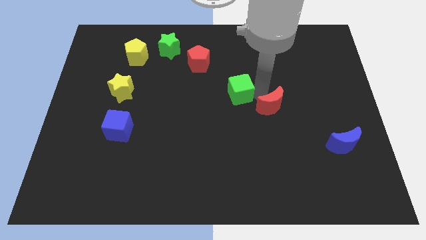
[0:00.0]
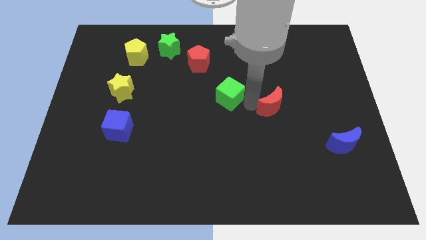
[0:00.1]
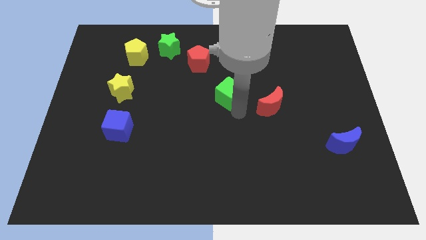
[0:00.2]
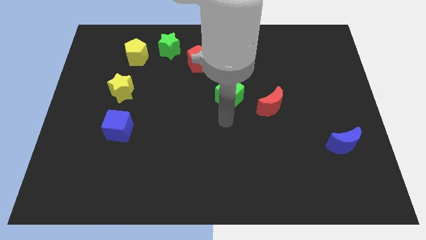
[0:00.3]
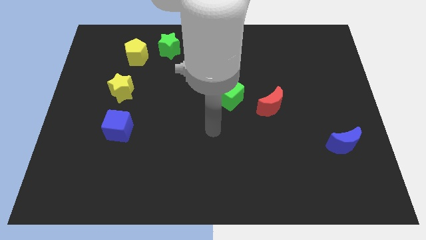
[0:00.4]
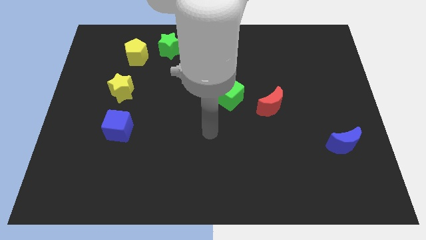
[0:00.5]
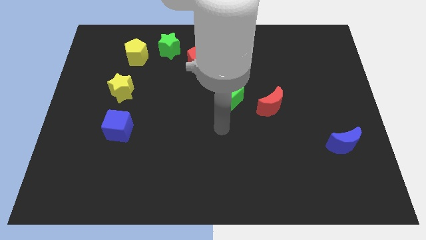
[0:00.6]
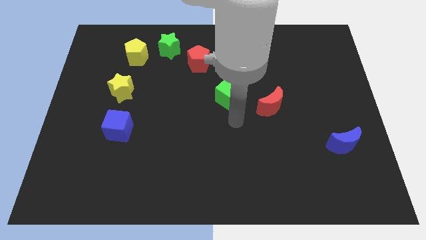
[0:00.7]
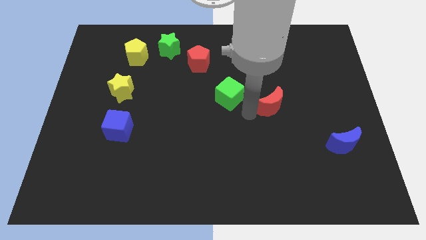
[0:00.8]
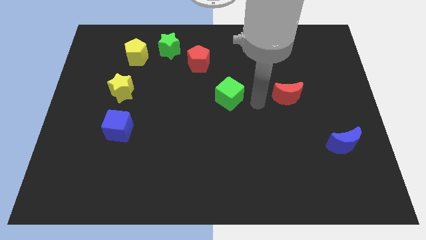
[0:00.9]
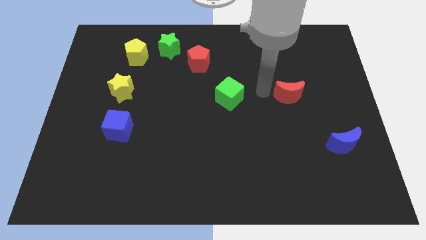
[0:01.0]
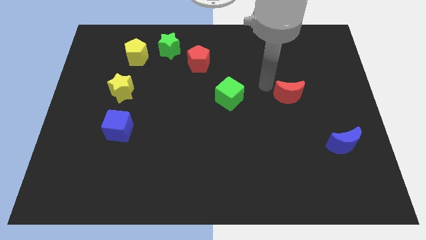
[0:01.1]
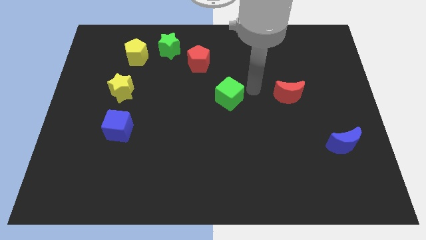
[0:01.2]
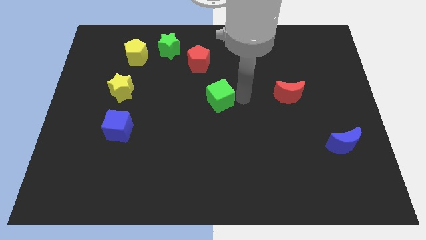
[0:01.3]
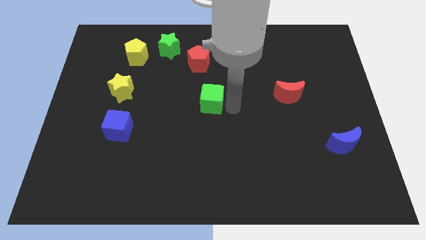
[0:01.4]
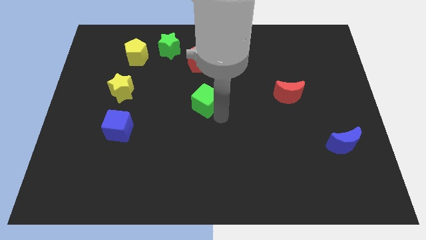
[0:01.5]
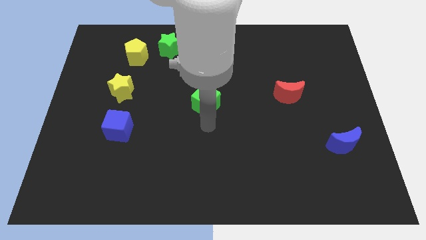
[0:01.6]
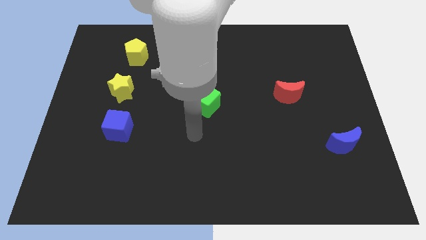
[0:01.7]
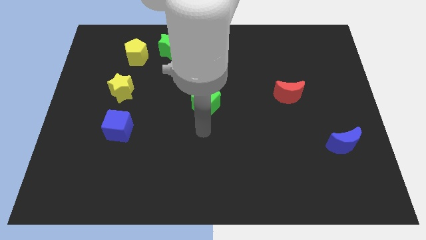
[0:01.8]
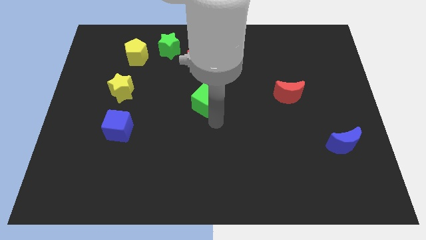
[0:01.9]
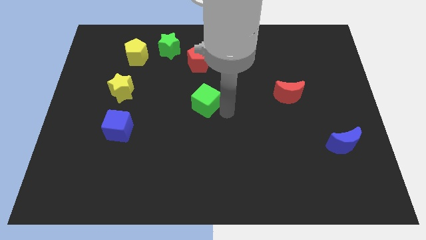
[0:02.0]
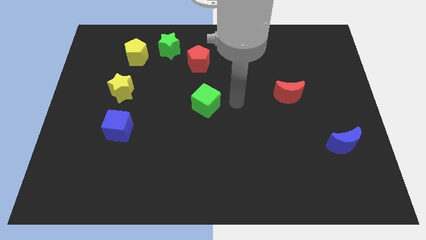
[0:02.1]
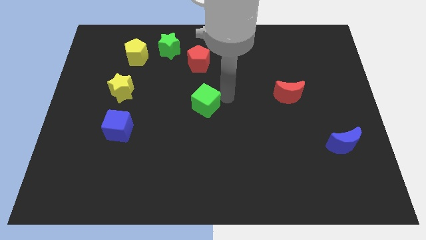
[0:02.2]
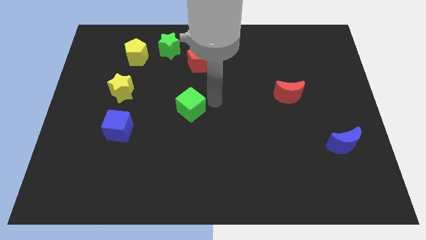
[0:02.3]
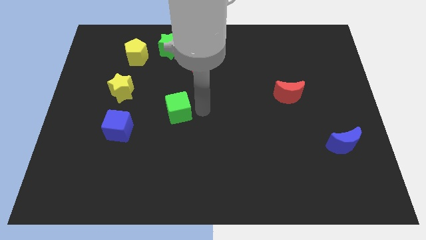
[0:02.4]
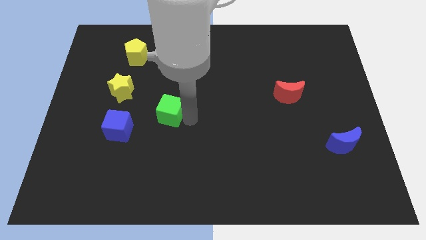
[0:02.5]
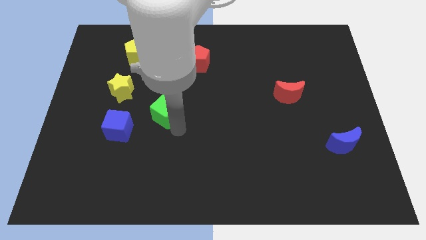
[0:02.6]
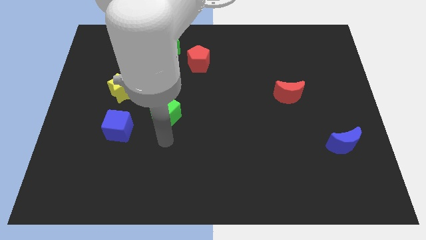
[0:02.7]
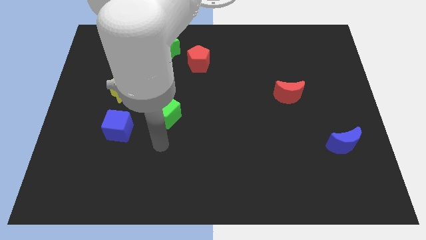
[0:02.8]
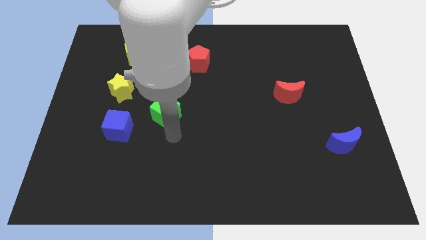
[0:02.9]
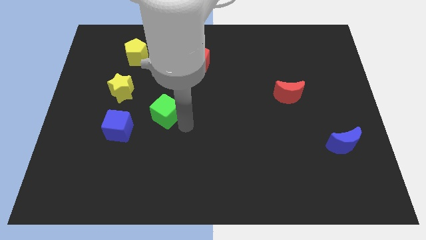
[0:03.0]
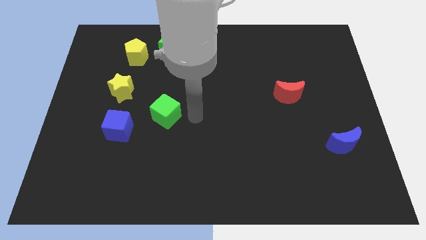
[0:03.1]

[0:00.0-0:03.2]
place the green cube close to the blue cube

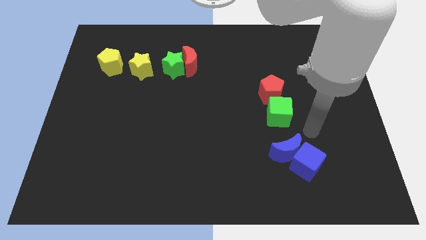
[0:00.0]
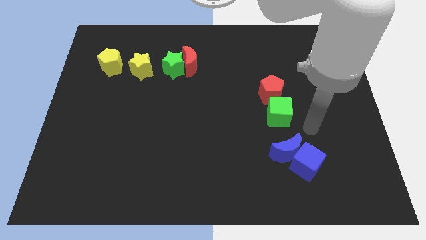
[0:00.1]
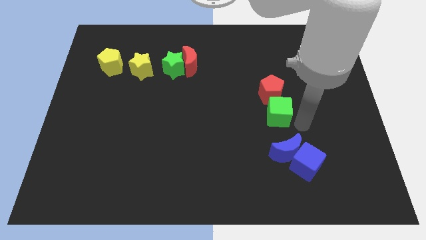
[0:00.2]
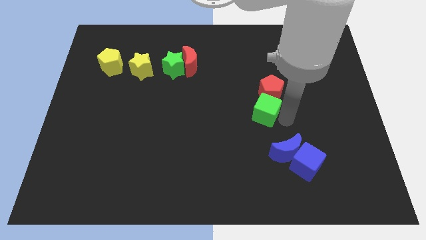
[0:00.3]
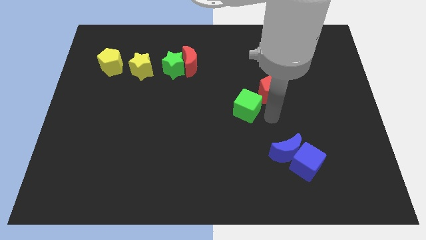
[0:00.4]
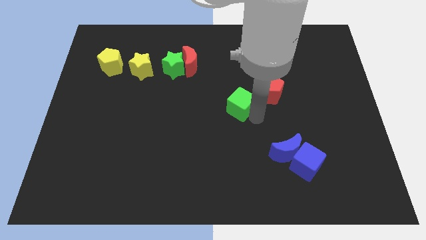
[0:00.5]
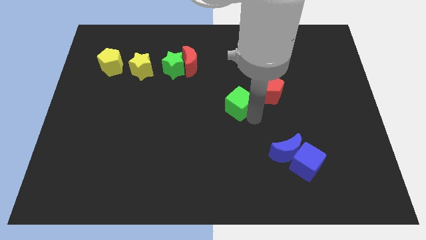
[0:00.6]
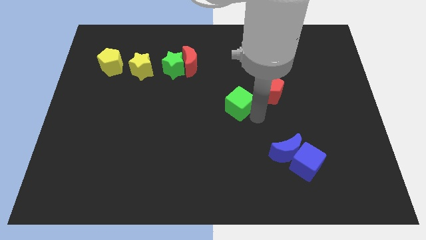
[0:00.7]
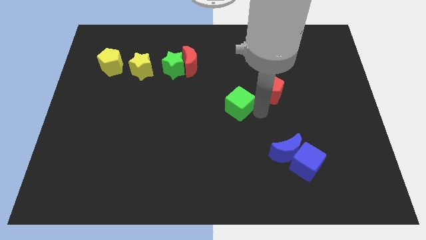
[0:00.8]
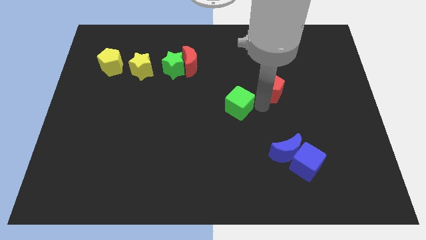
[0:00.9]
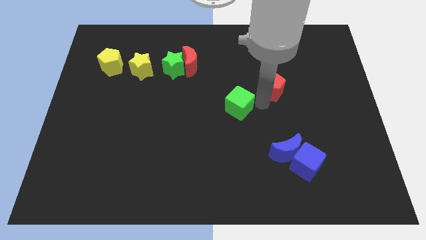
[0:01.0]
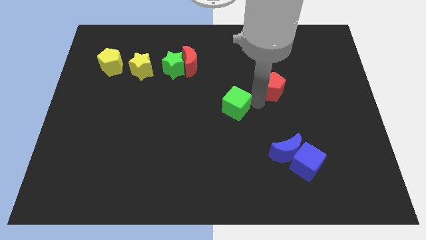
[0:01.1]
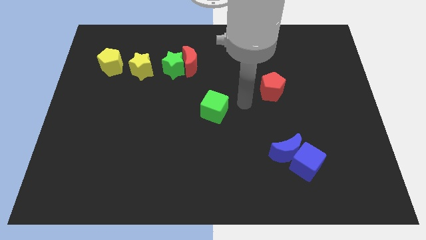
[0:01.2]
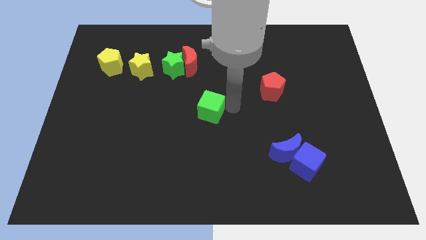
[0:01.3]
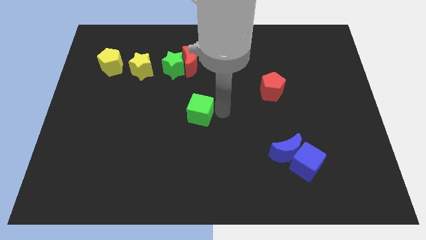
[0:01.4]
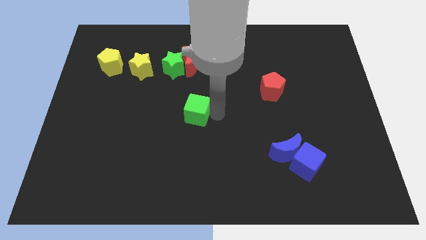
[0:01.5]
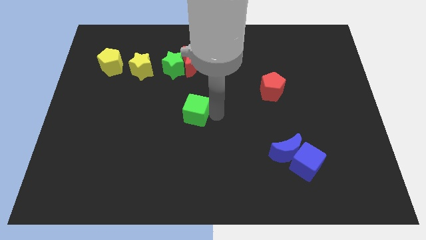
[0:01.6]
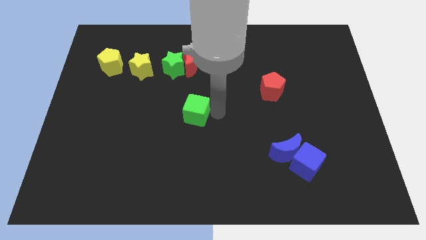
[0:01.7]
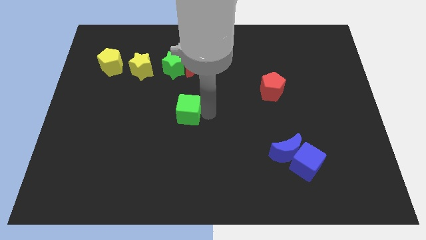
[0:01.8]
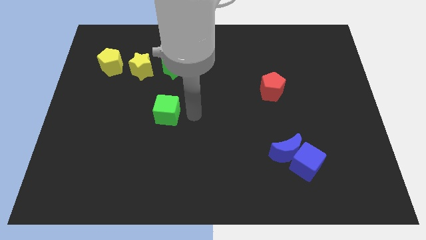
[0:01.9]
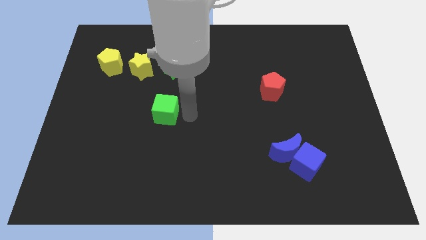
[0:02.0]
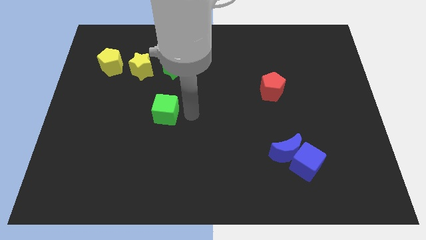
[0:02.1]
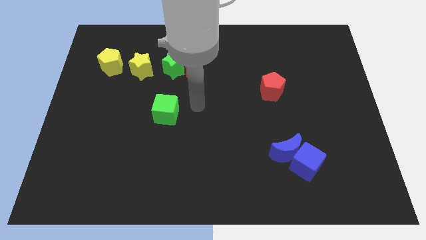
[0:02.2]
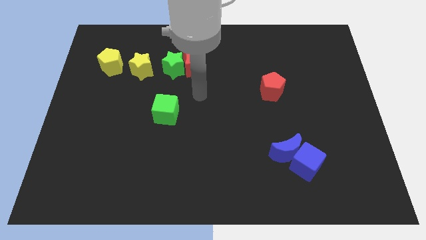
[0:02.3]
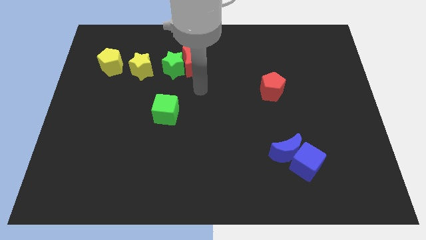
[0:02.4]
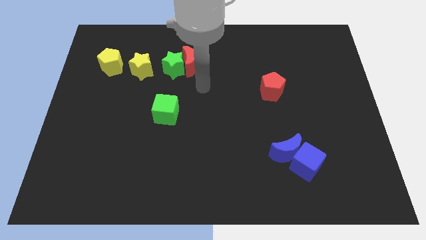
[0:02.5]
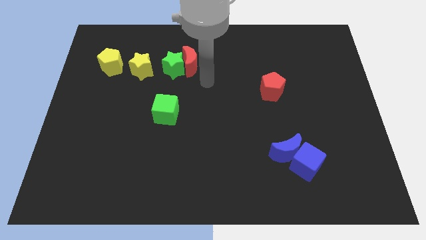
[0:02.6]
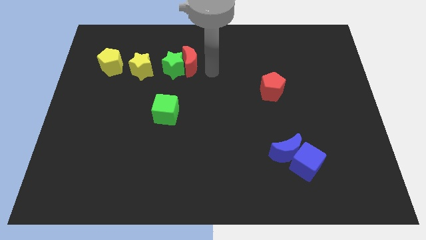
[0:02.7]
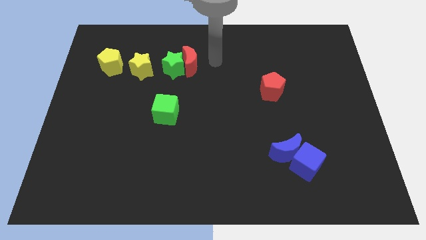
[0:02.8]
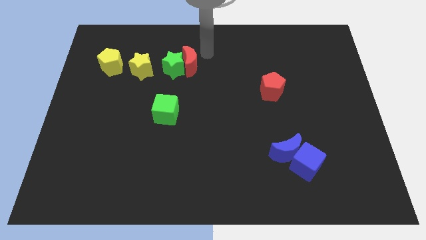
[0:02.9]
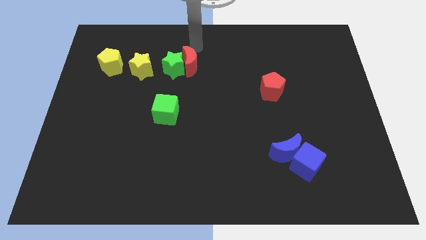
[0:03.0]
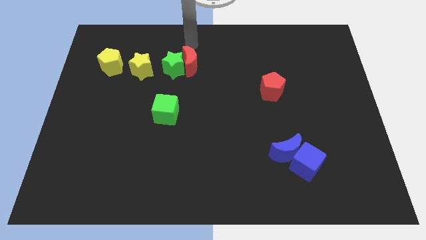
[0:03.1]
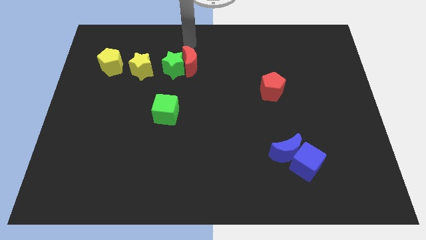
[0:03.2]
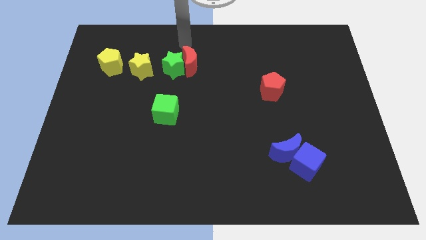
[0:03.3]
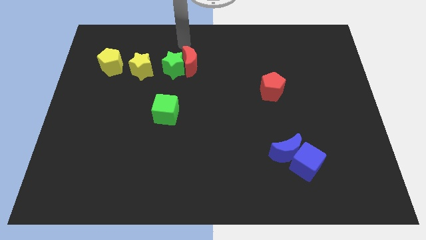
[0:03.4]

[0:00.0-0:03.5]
push the green cube below green star

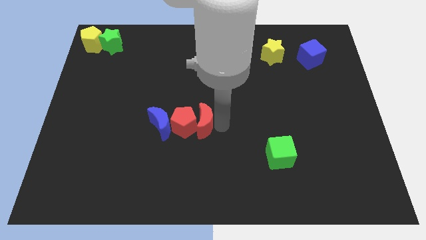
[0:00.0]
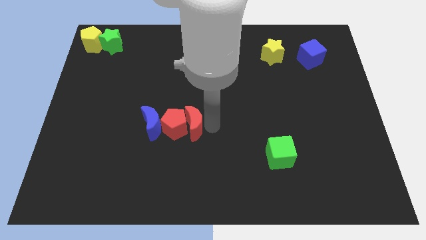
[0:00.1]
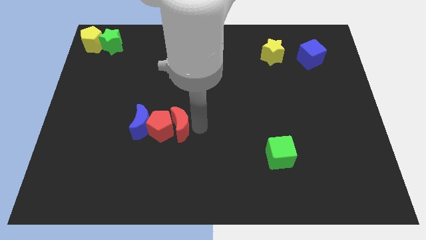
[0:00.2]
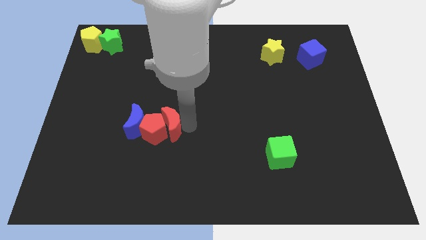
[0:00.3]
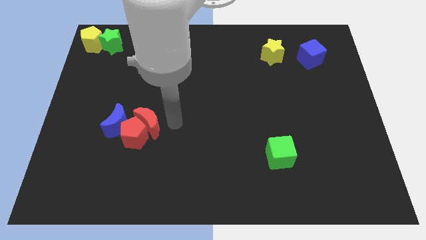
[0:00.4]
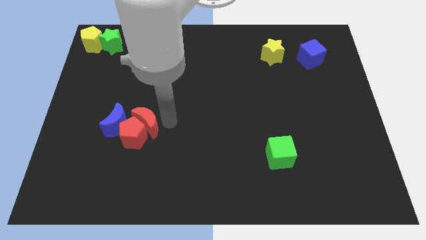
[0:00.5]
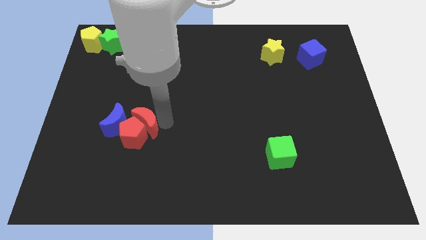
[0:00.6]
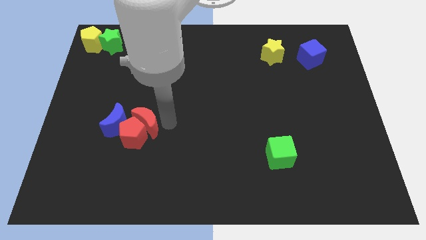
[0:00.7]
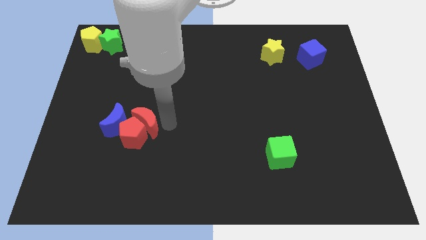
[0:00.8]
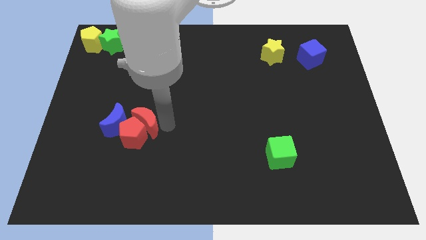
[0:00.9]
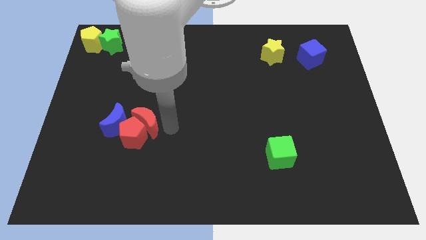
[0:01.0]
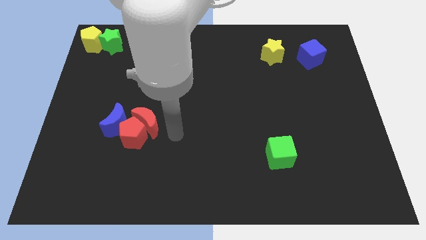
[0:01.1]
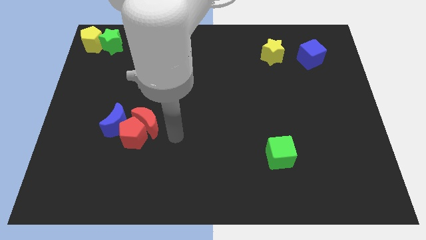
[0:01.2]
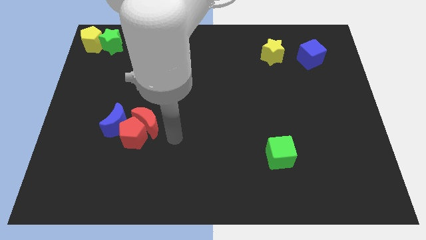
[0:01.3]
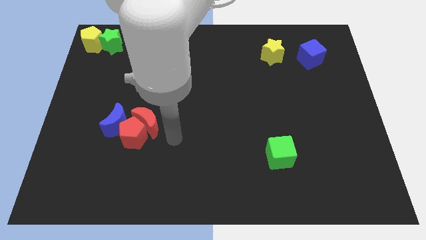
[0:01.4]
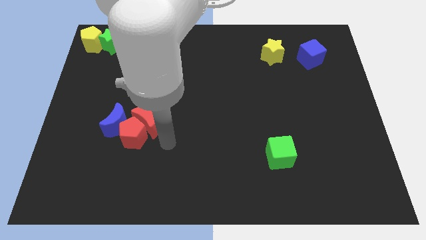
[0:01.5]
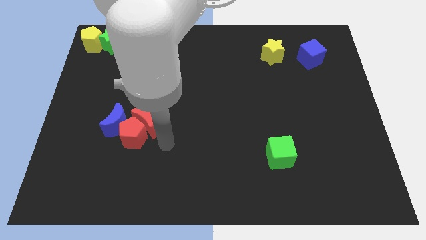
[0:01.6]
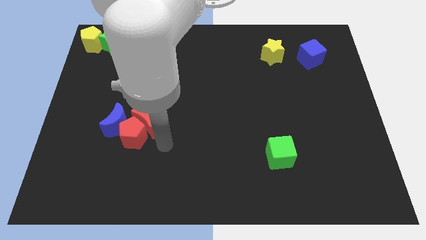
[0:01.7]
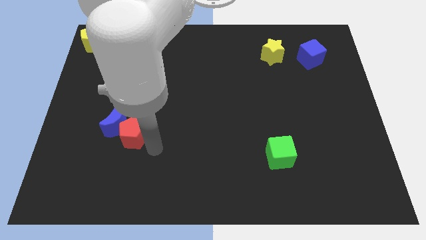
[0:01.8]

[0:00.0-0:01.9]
push the red pentagon towards the left side of the board with the red moon
